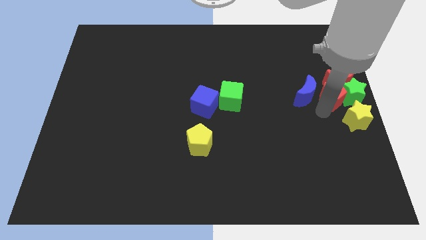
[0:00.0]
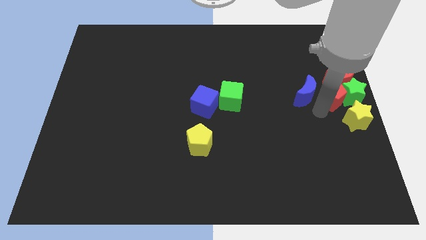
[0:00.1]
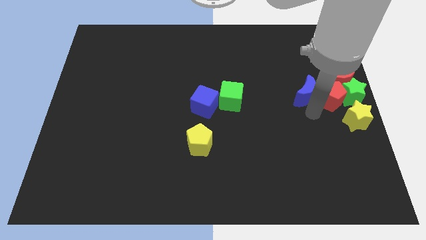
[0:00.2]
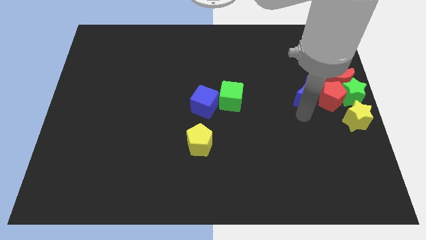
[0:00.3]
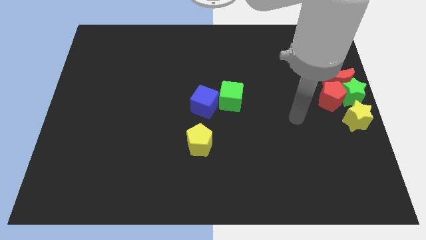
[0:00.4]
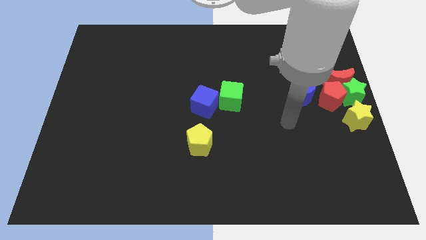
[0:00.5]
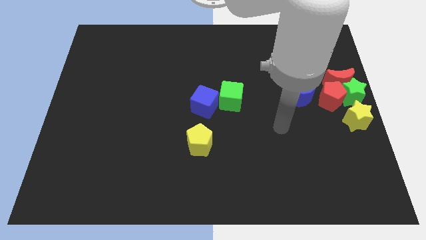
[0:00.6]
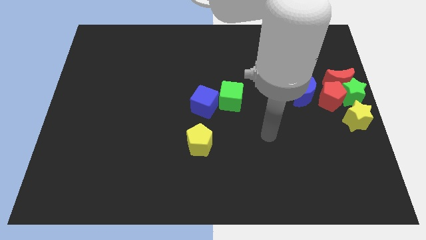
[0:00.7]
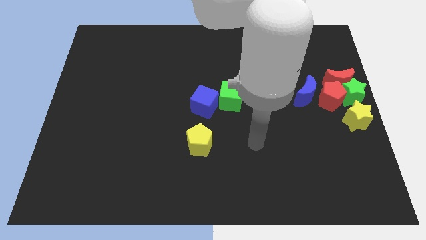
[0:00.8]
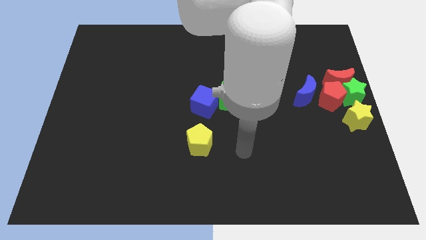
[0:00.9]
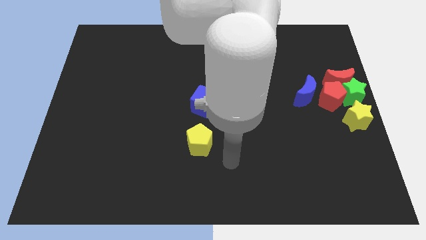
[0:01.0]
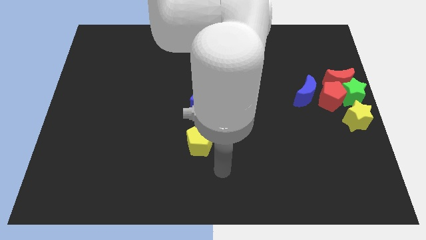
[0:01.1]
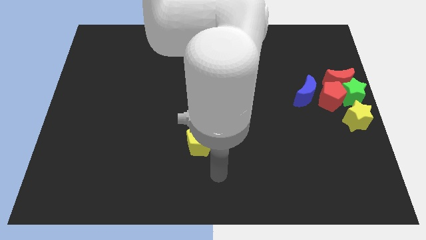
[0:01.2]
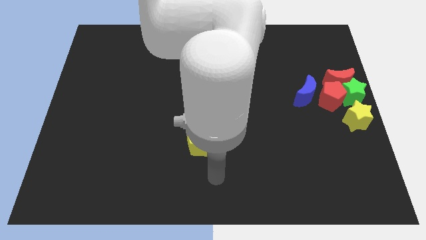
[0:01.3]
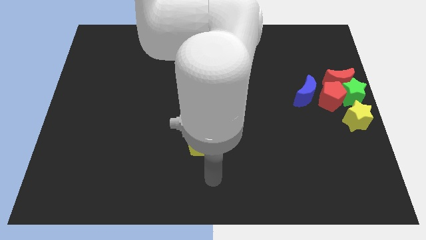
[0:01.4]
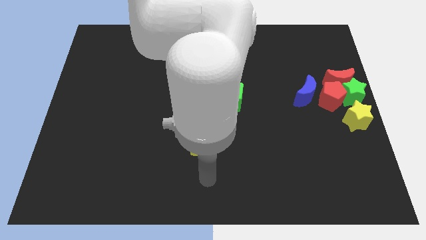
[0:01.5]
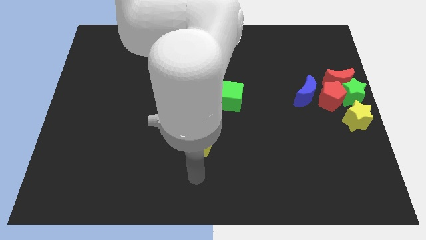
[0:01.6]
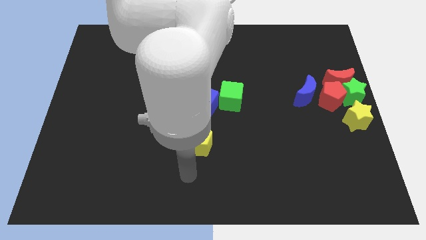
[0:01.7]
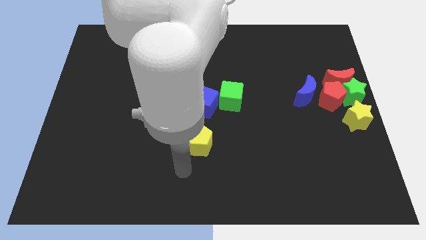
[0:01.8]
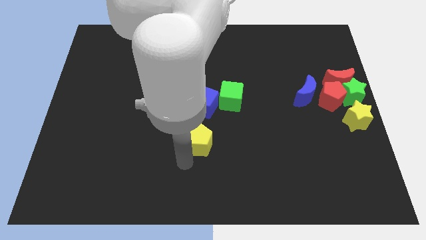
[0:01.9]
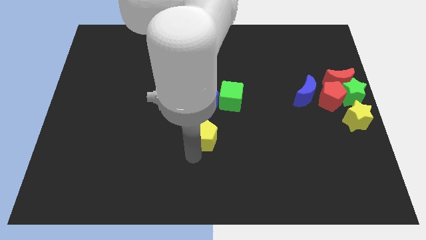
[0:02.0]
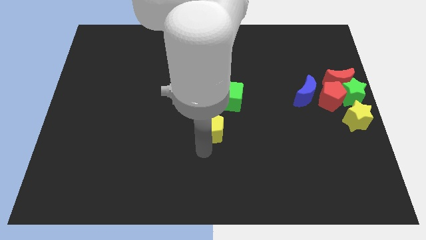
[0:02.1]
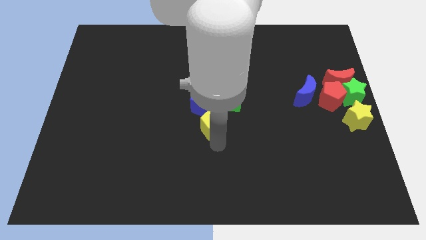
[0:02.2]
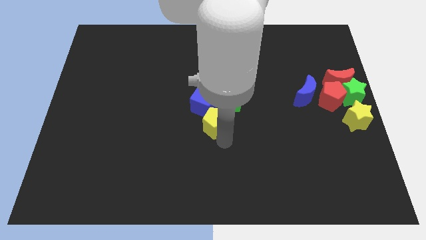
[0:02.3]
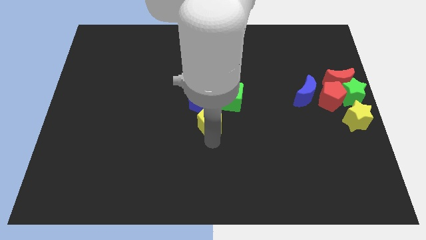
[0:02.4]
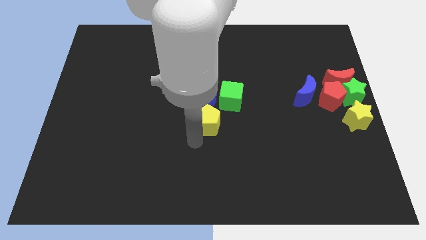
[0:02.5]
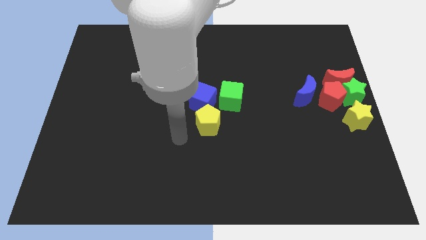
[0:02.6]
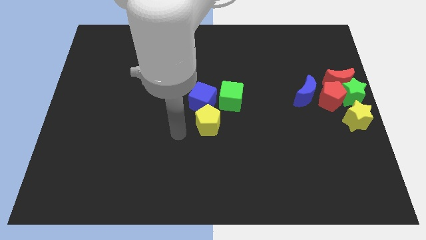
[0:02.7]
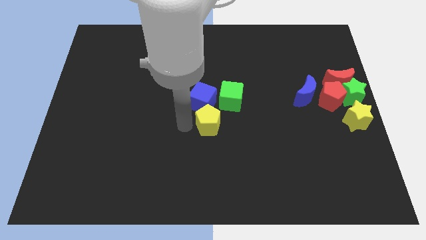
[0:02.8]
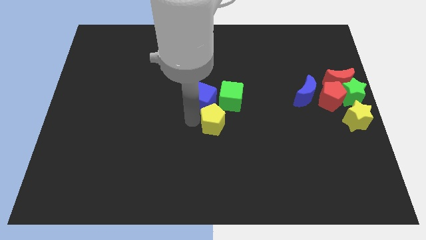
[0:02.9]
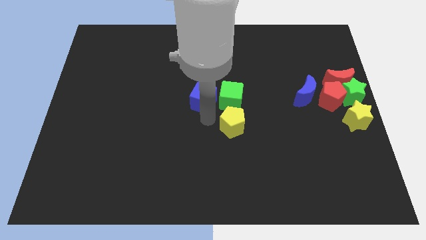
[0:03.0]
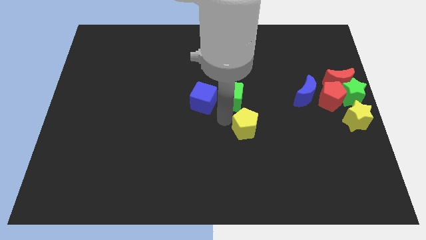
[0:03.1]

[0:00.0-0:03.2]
adjust the yellow pentagon at the bottom of the green cube

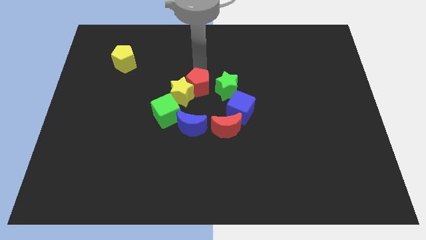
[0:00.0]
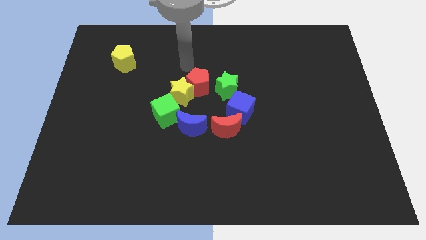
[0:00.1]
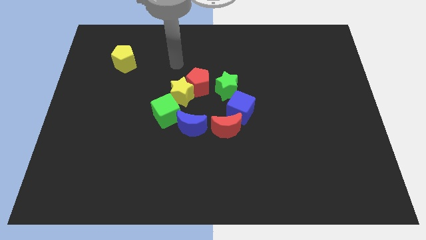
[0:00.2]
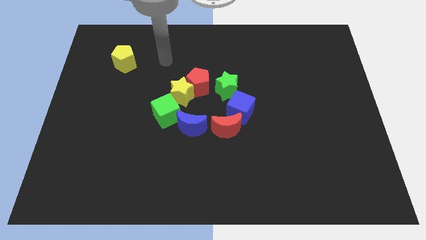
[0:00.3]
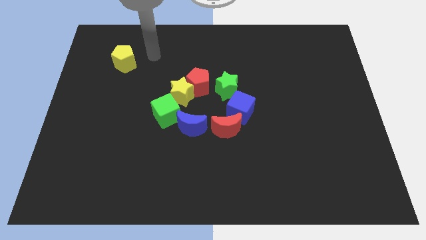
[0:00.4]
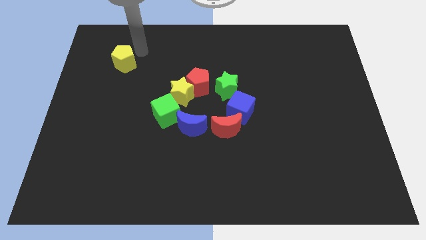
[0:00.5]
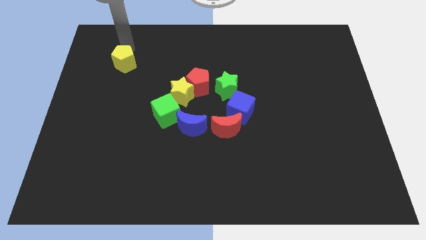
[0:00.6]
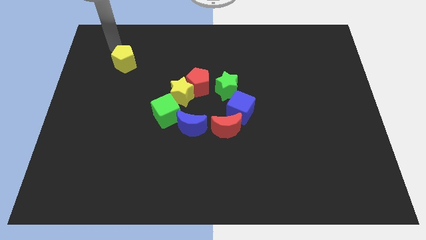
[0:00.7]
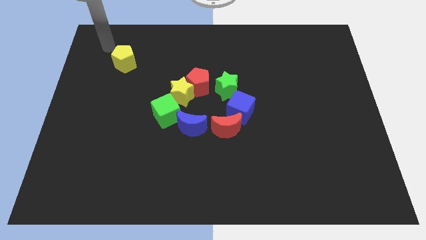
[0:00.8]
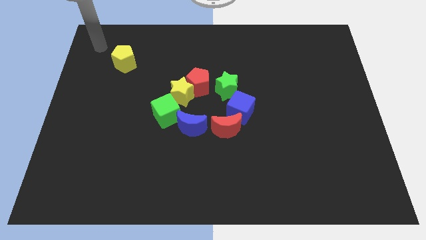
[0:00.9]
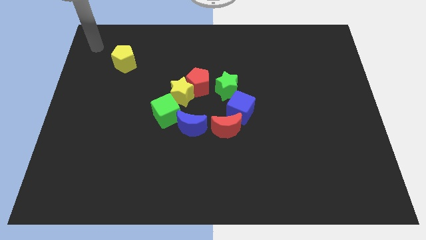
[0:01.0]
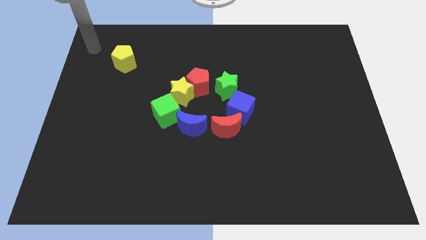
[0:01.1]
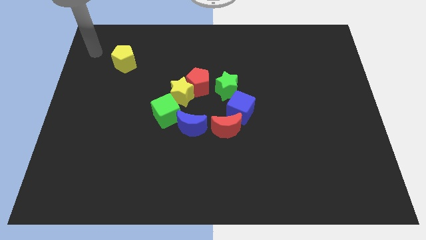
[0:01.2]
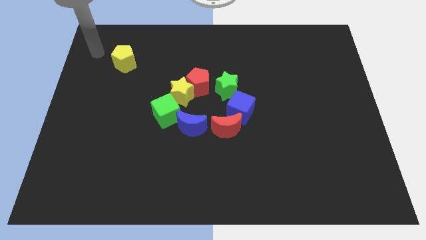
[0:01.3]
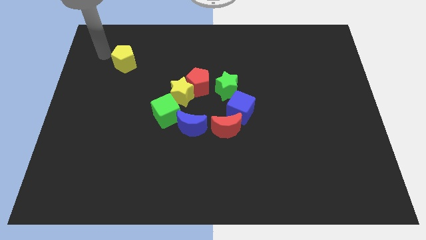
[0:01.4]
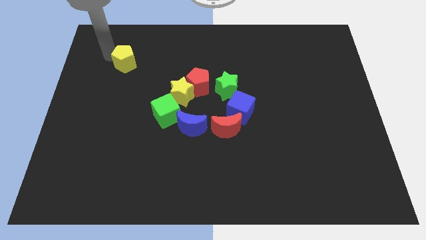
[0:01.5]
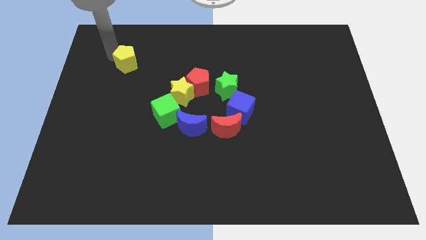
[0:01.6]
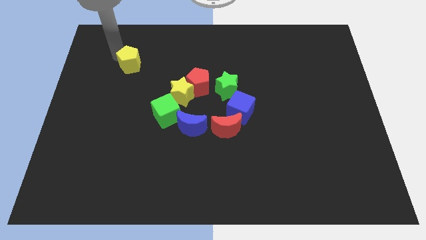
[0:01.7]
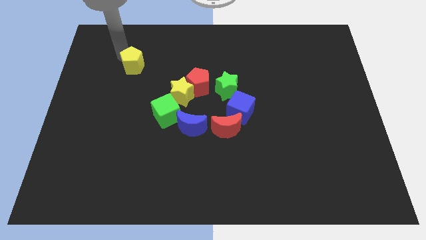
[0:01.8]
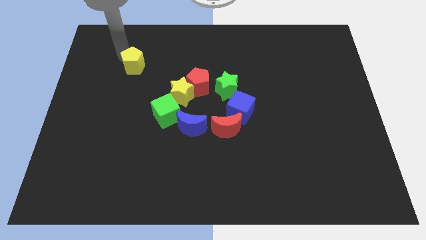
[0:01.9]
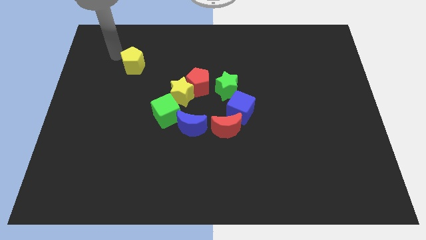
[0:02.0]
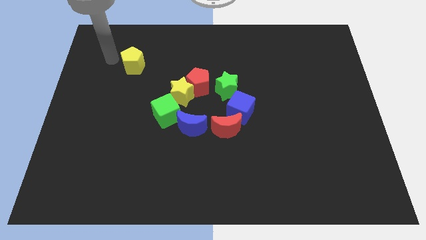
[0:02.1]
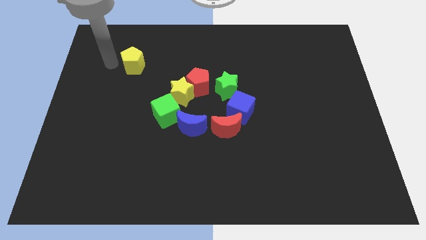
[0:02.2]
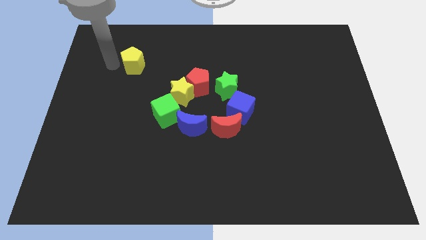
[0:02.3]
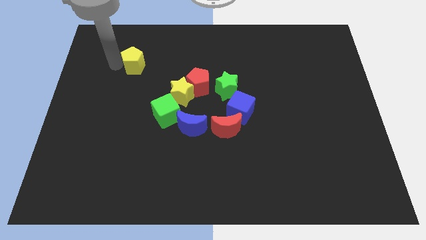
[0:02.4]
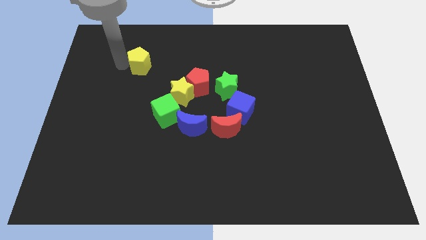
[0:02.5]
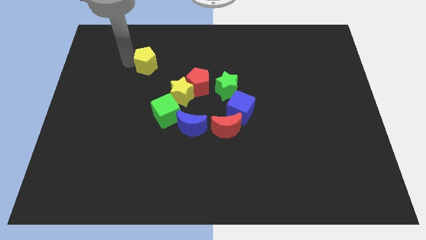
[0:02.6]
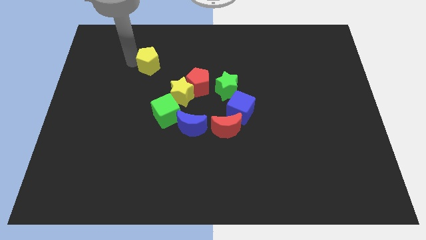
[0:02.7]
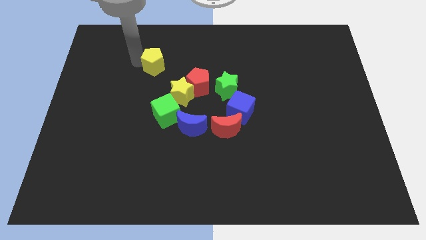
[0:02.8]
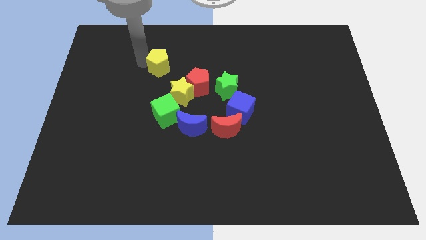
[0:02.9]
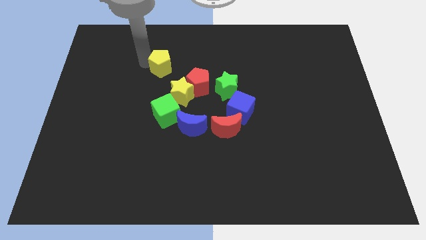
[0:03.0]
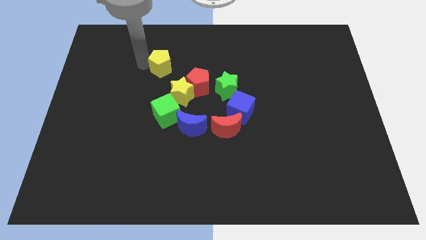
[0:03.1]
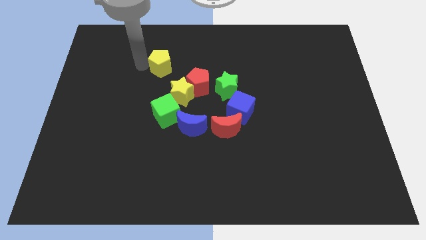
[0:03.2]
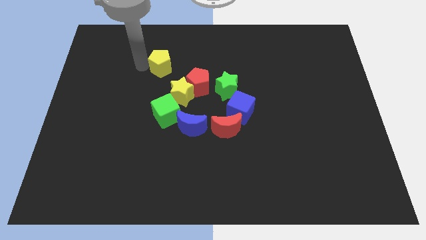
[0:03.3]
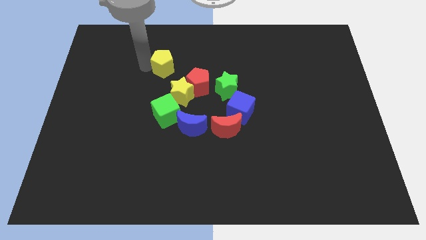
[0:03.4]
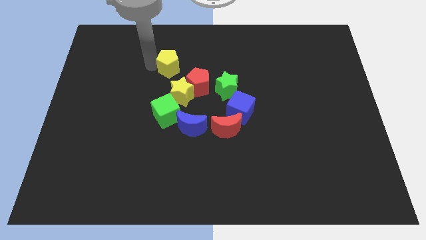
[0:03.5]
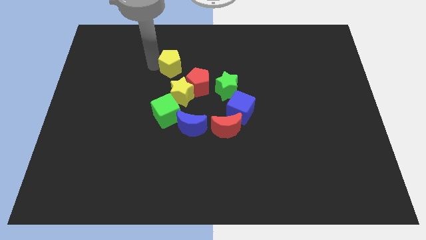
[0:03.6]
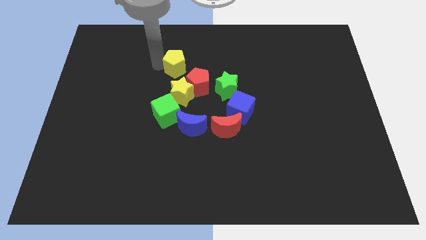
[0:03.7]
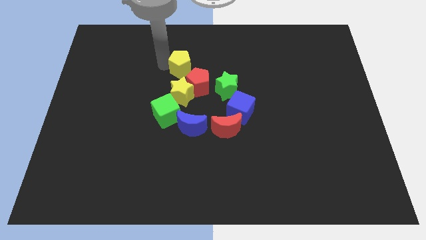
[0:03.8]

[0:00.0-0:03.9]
place the yellow pentagon at the top left side of red pentagon

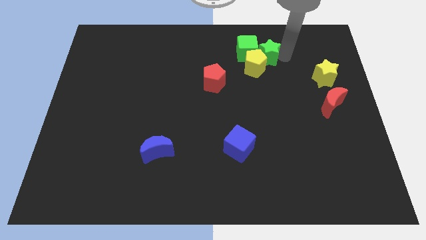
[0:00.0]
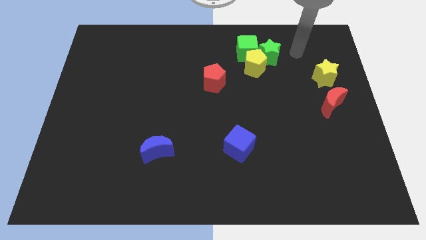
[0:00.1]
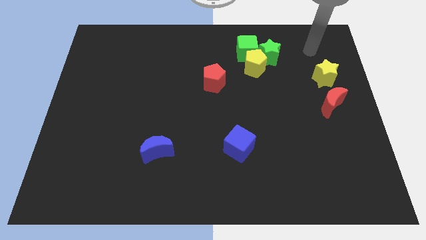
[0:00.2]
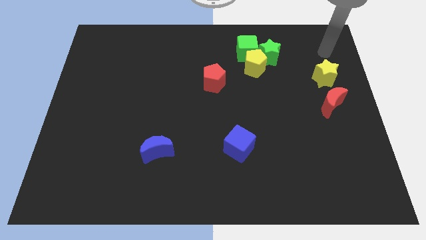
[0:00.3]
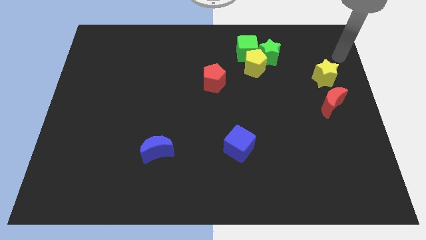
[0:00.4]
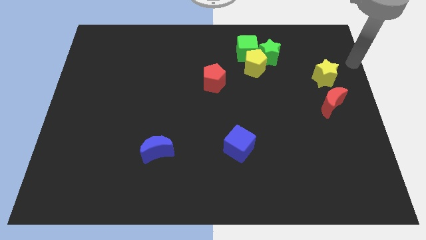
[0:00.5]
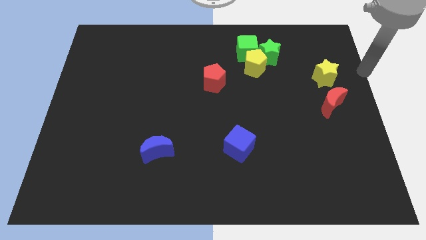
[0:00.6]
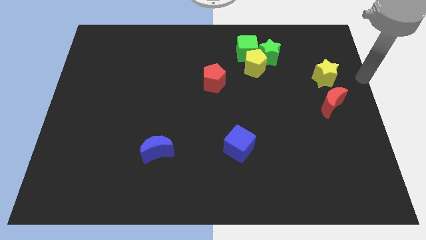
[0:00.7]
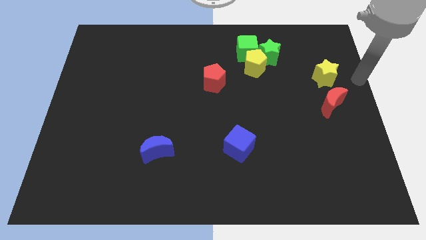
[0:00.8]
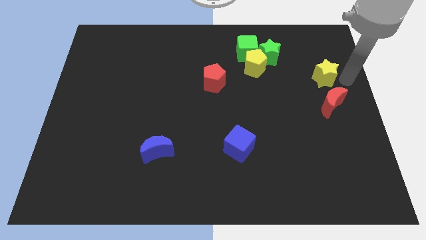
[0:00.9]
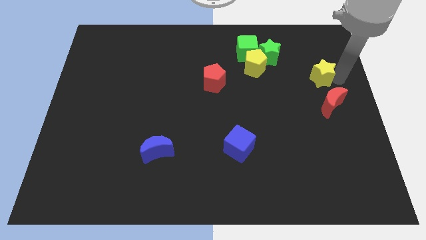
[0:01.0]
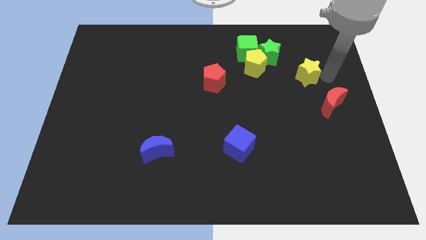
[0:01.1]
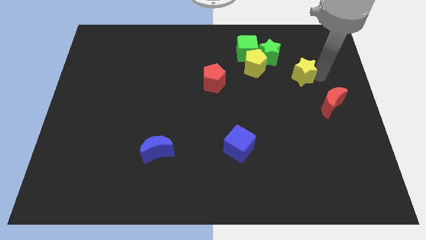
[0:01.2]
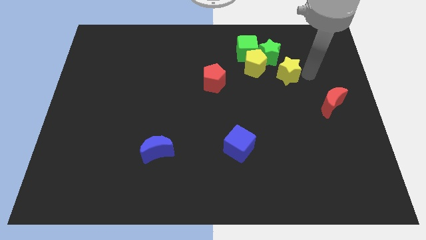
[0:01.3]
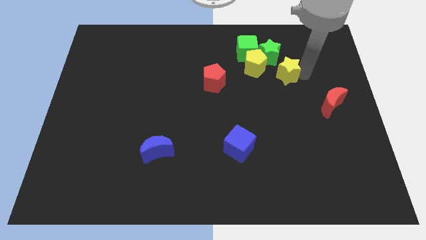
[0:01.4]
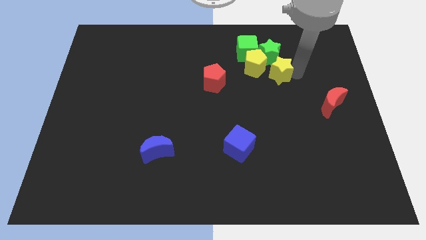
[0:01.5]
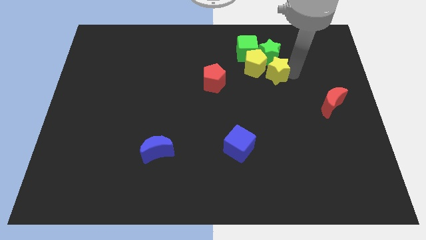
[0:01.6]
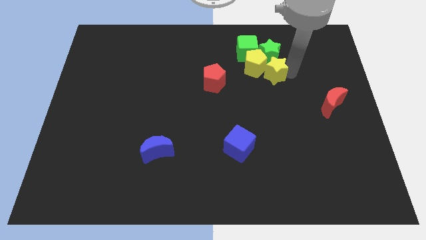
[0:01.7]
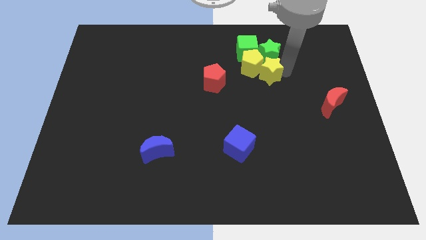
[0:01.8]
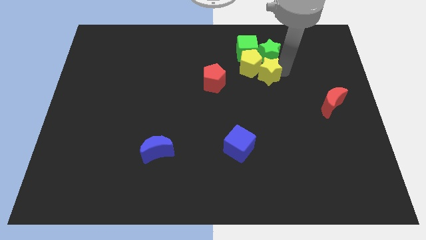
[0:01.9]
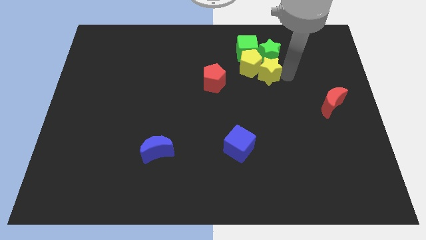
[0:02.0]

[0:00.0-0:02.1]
push the yellow star into yellow pentagon
